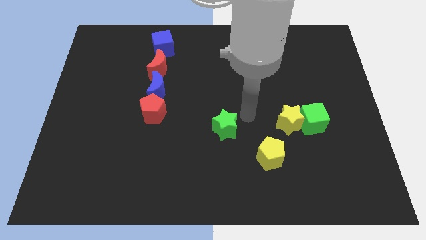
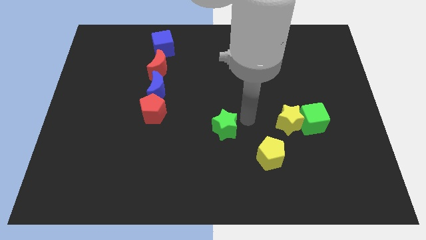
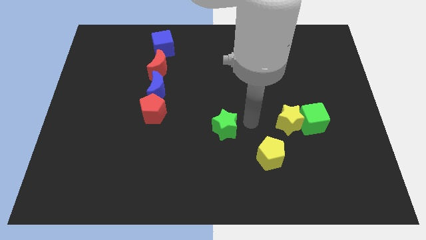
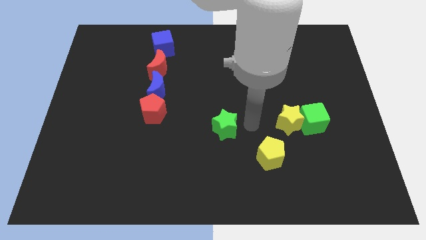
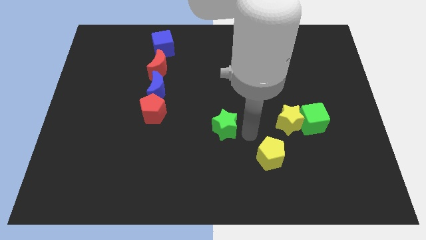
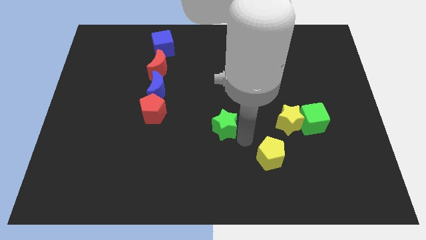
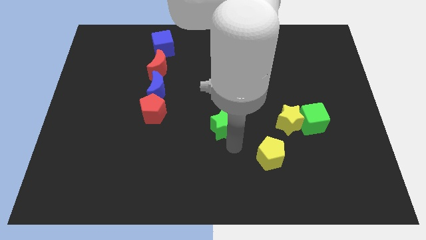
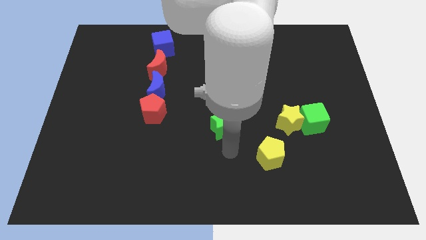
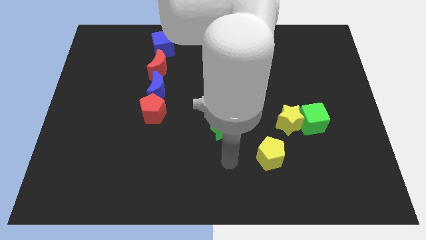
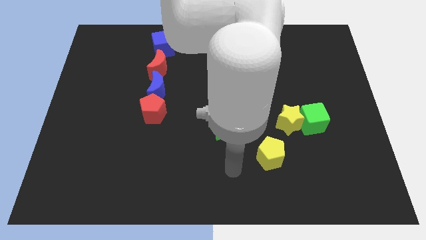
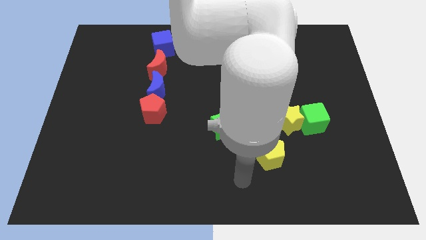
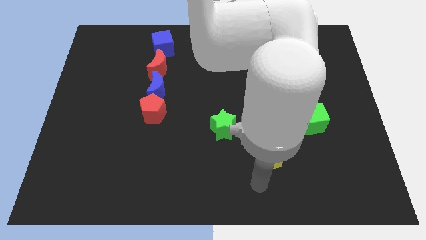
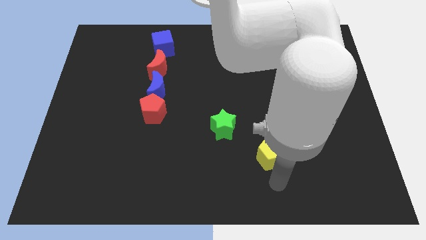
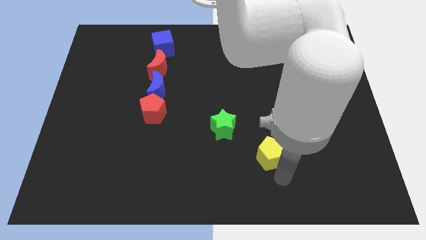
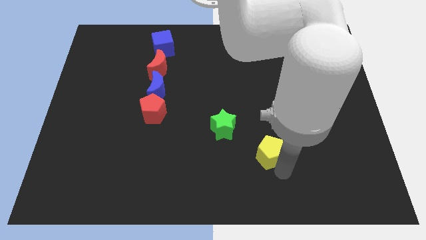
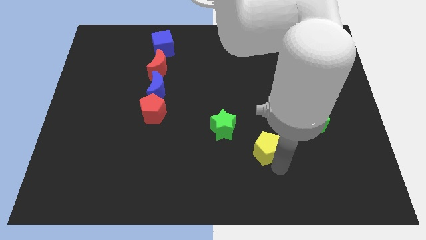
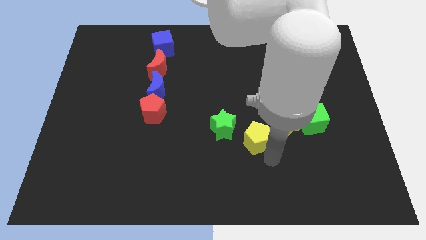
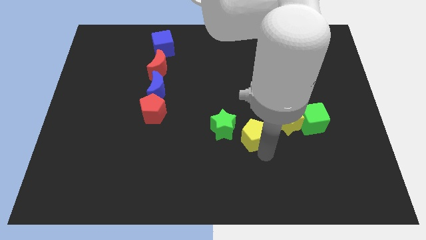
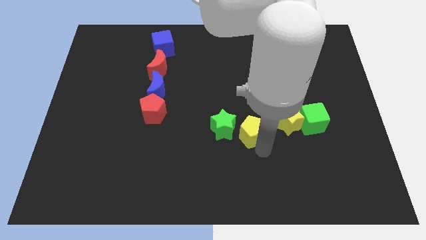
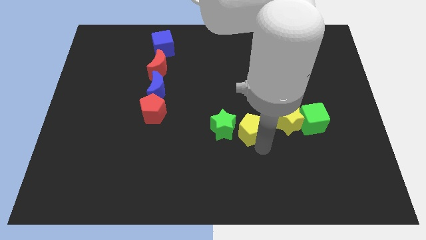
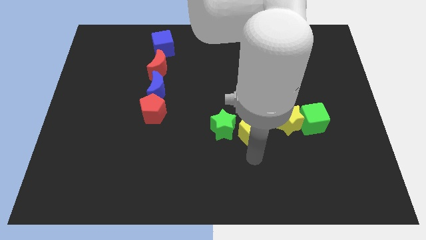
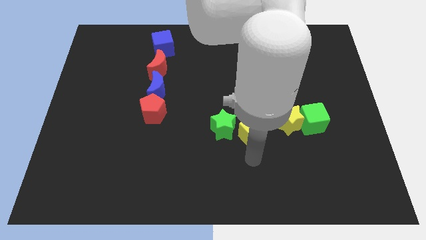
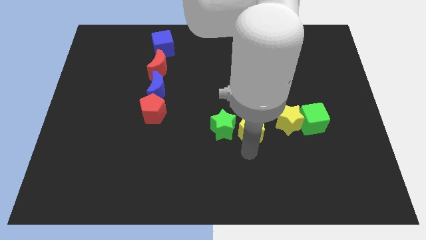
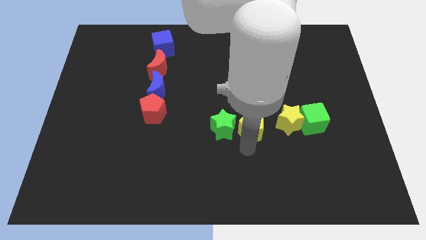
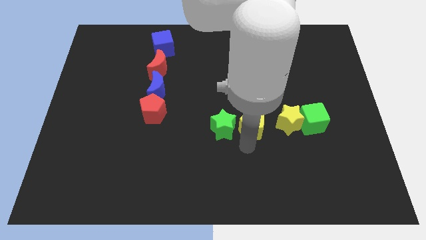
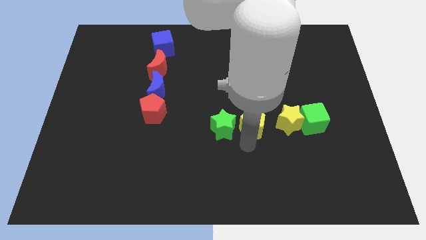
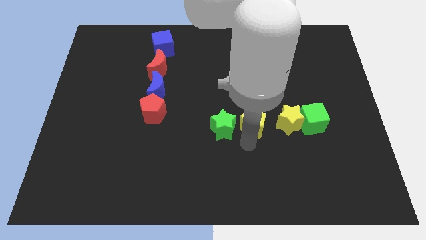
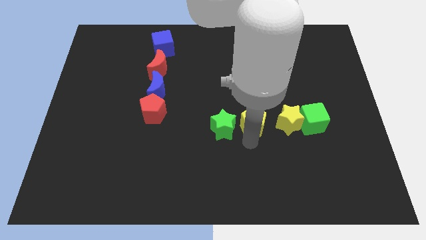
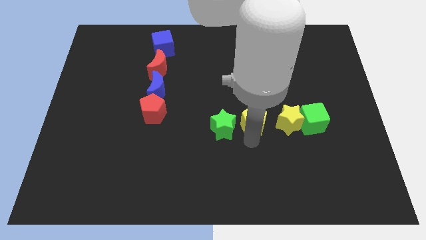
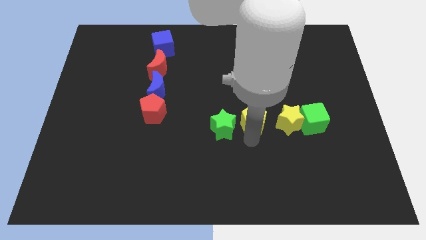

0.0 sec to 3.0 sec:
place the yellow pentagon in between both the stars

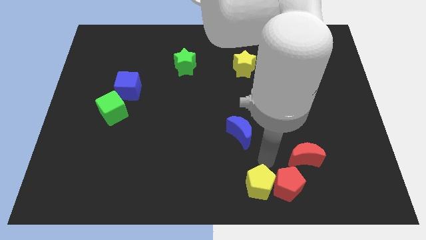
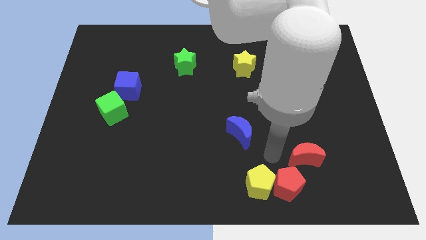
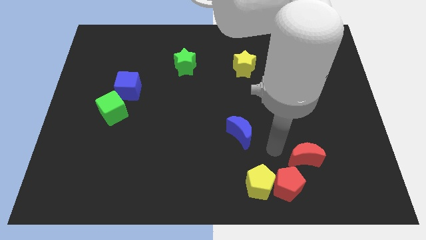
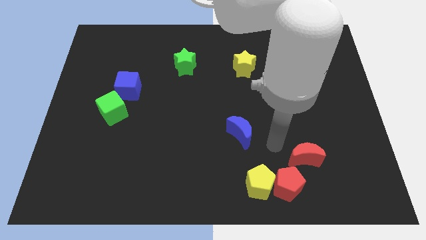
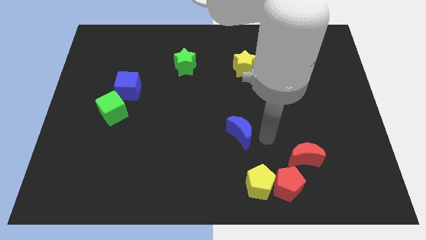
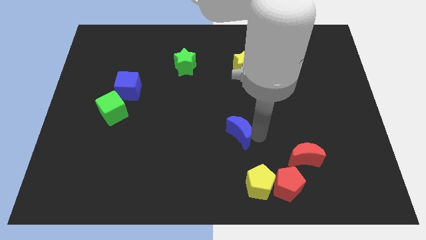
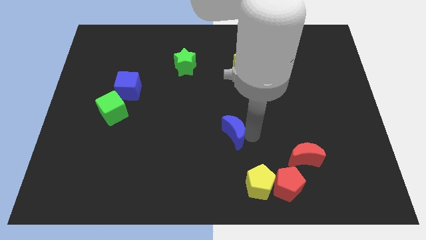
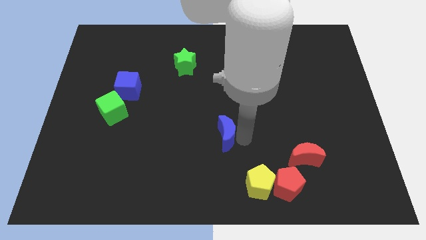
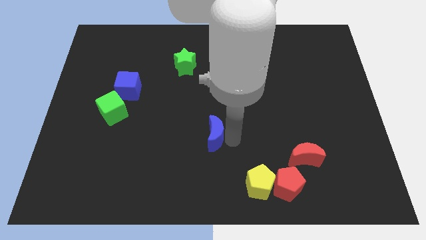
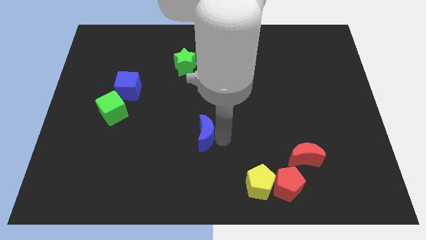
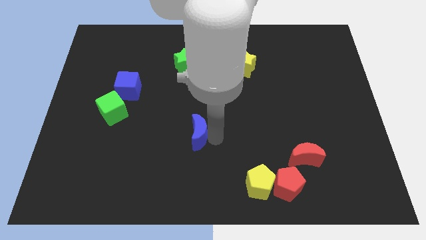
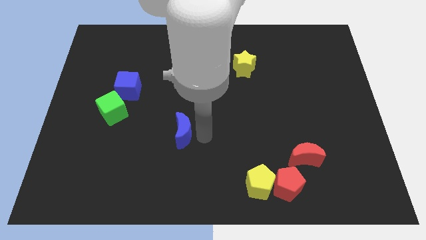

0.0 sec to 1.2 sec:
place the blue crescent vertically under the green star

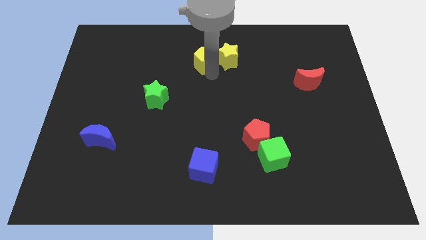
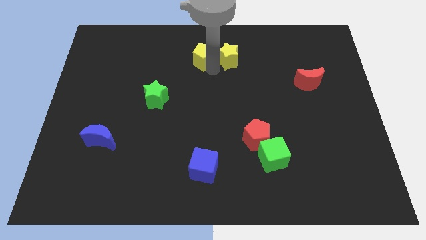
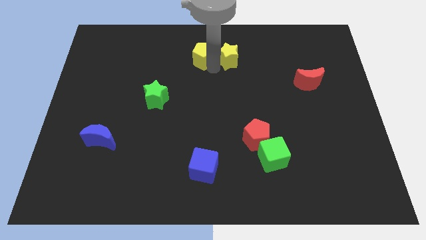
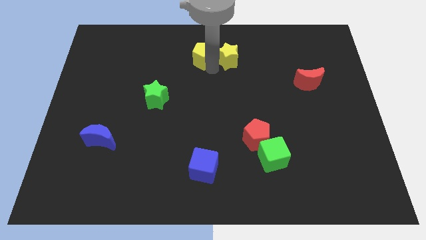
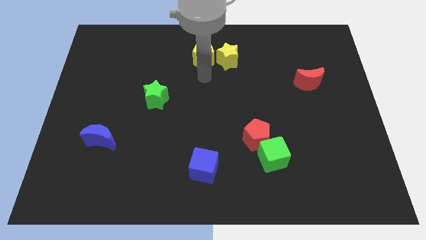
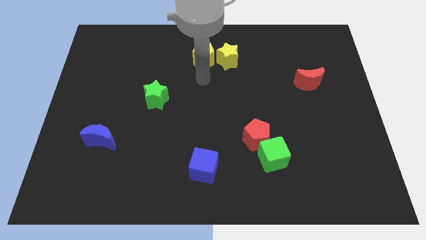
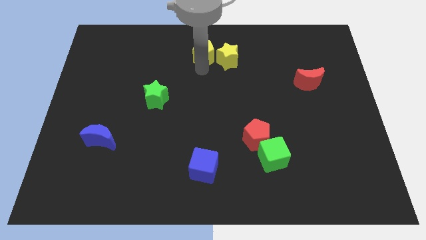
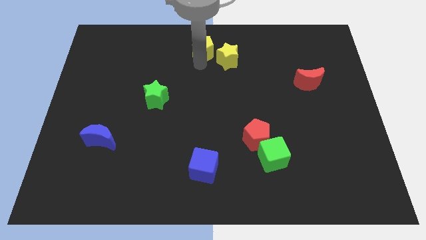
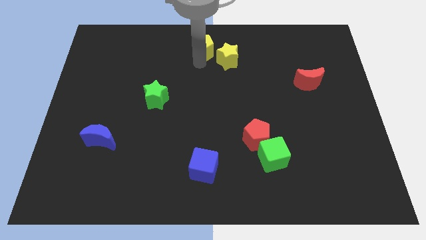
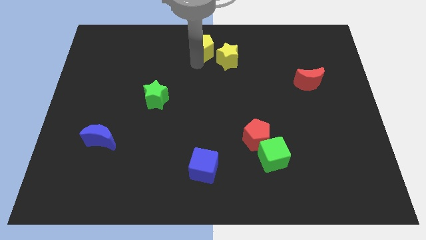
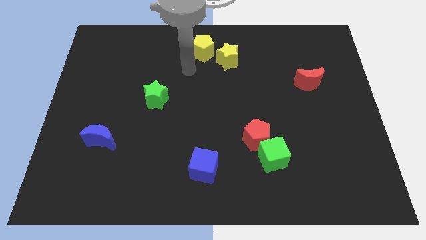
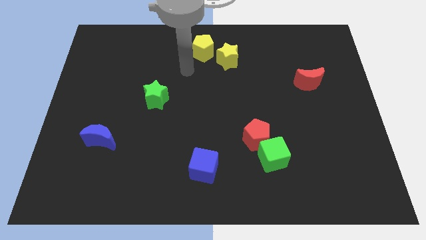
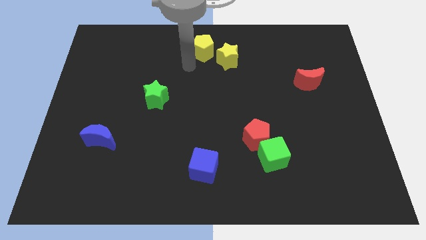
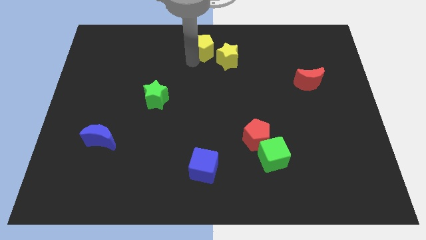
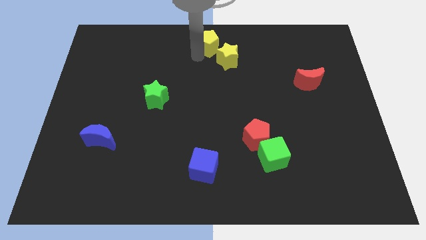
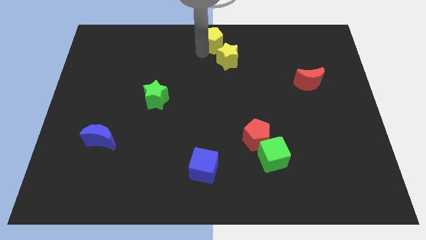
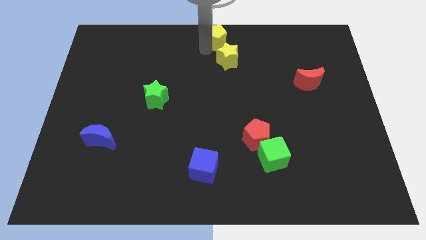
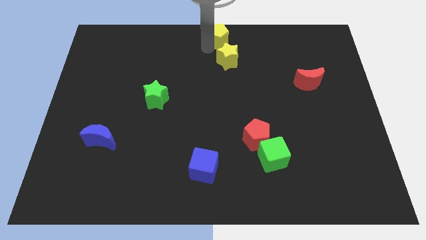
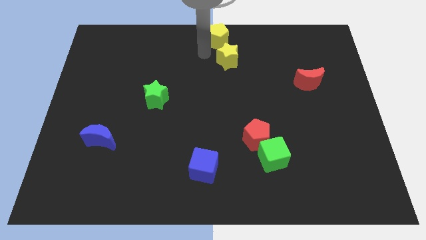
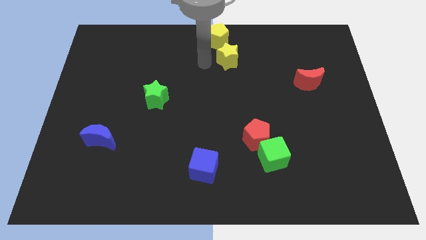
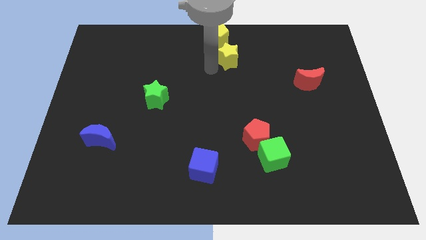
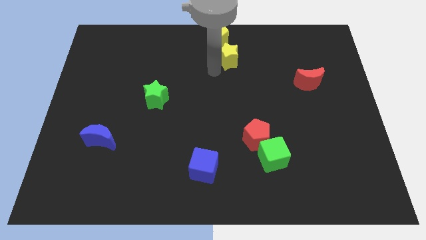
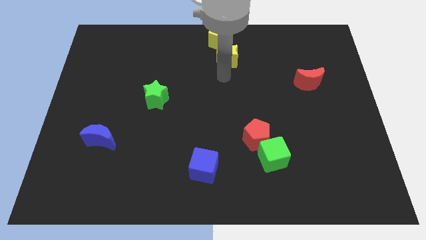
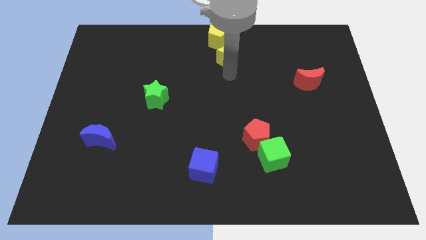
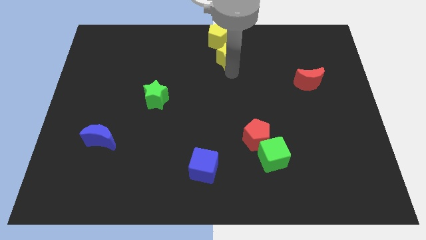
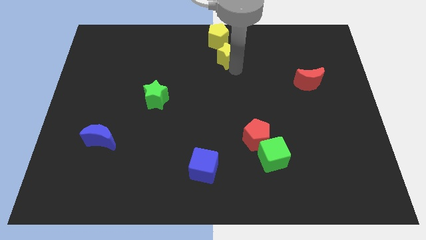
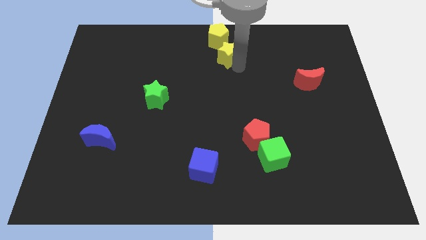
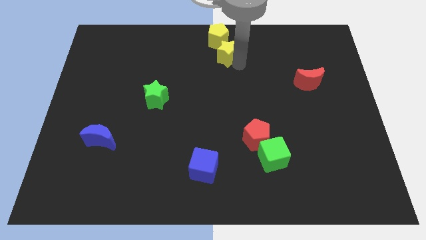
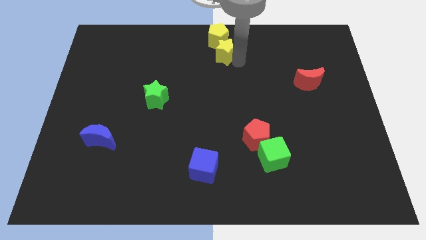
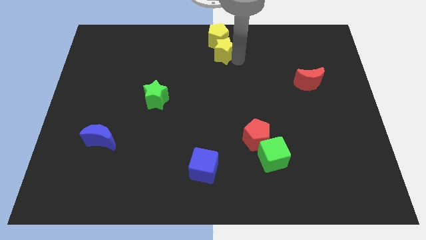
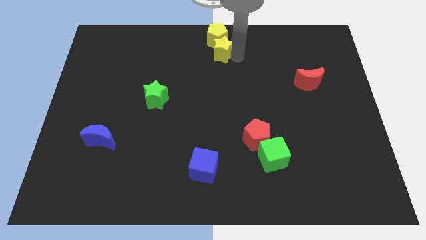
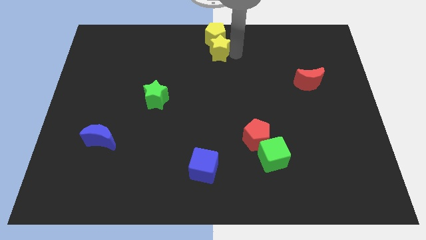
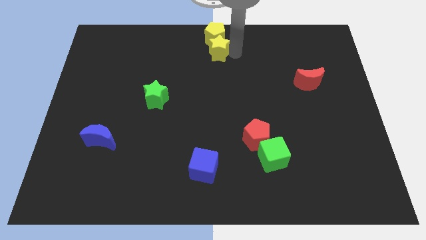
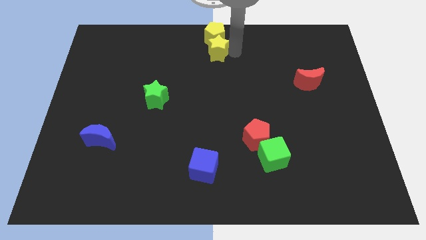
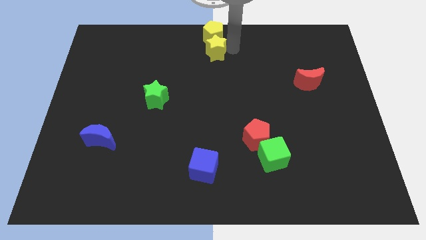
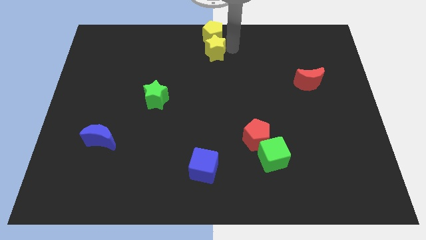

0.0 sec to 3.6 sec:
place the group of yellow blocks to the top center of the board

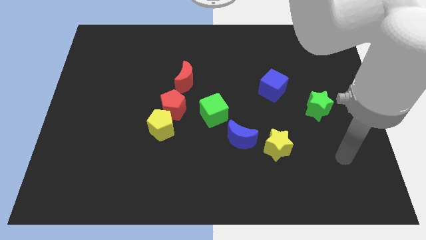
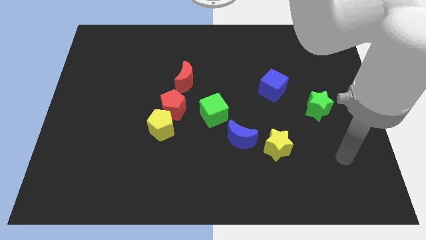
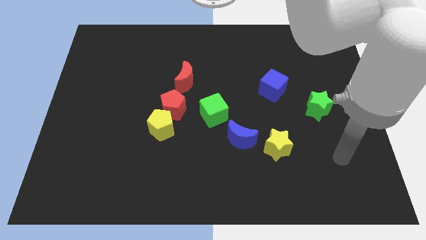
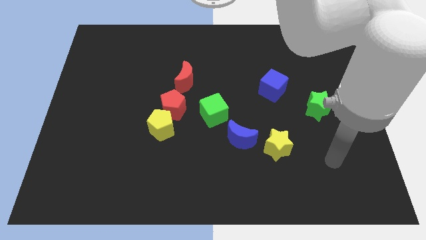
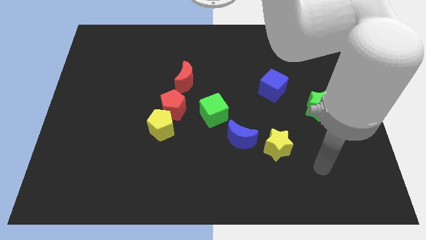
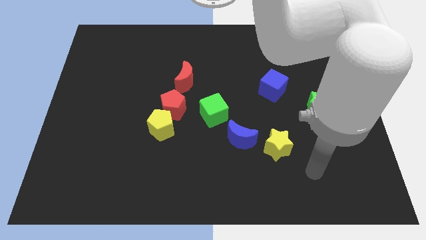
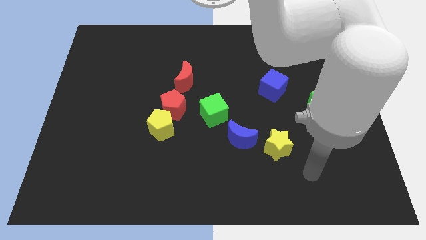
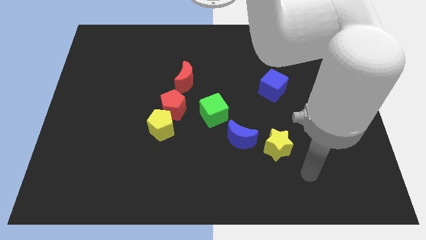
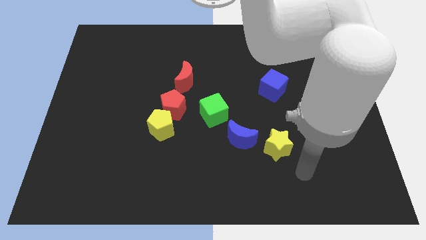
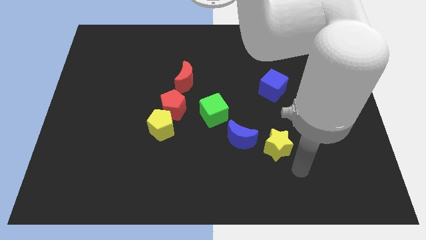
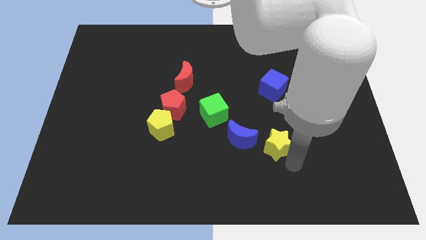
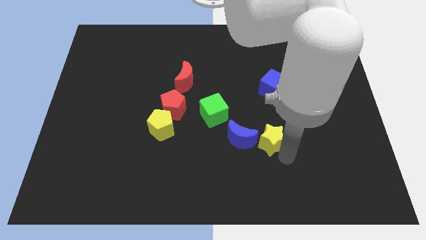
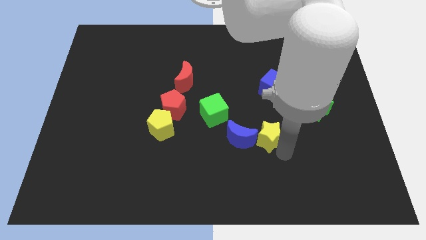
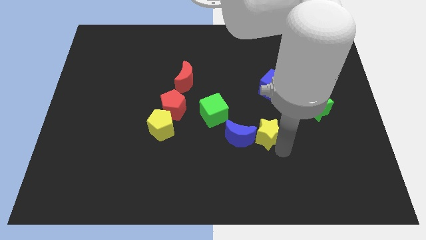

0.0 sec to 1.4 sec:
move arm towards the yellow star
